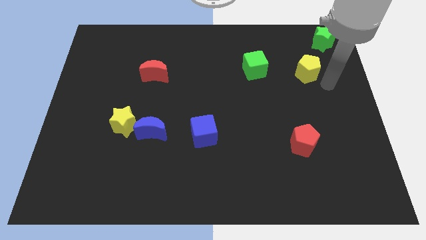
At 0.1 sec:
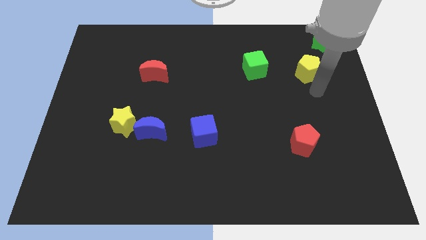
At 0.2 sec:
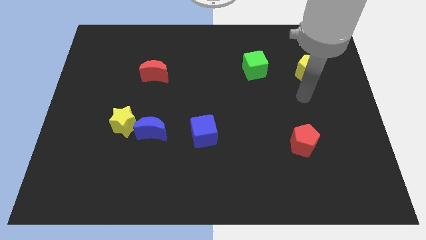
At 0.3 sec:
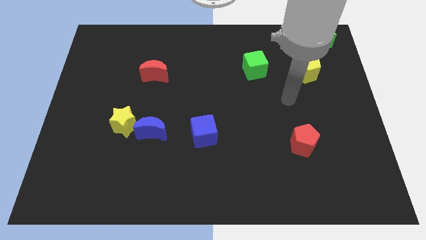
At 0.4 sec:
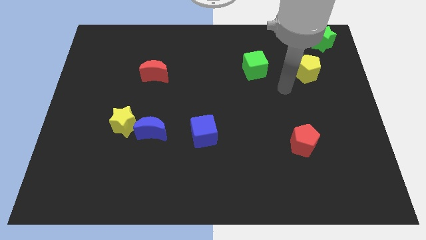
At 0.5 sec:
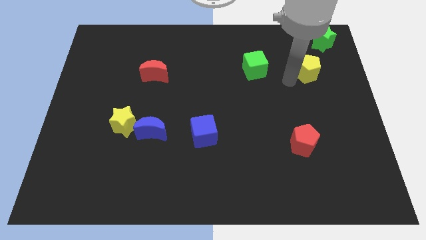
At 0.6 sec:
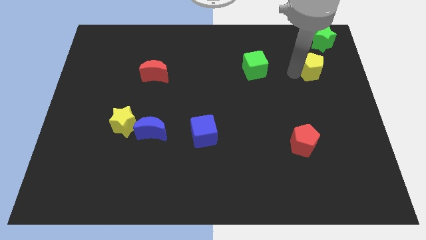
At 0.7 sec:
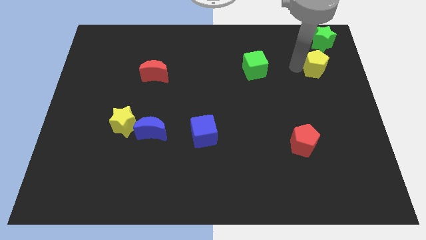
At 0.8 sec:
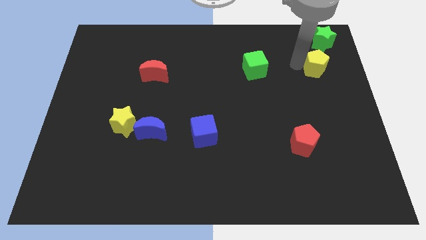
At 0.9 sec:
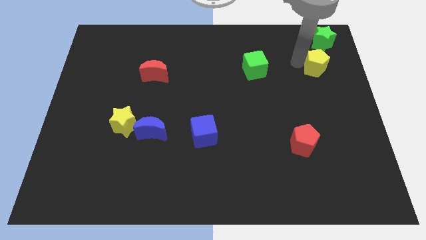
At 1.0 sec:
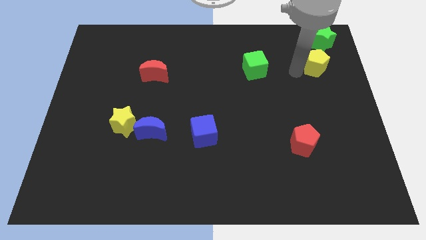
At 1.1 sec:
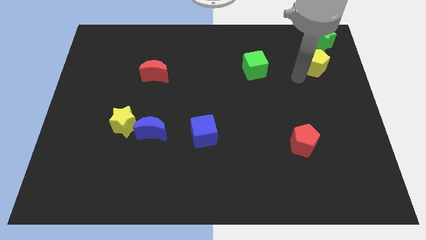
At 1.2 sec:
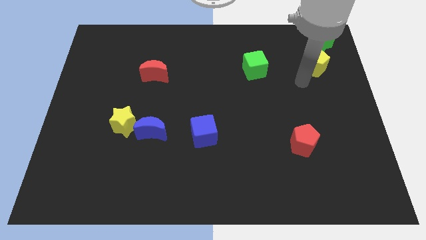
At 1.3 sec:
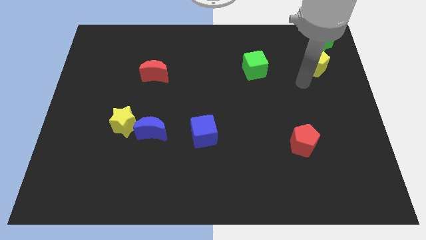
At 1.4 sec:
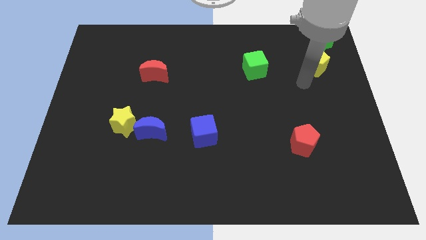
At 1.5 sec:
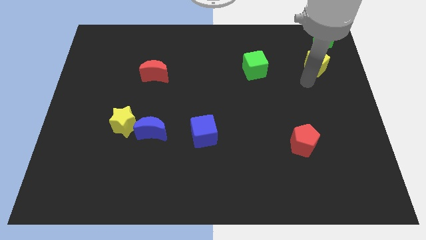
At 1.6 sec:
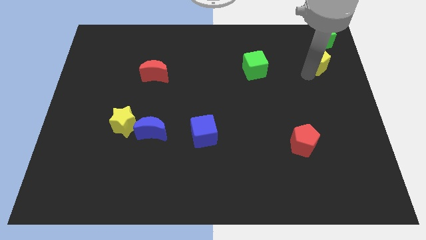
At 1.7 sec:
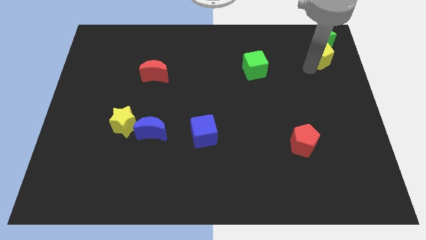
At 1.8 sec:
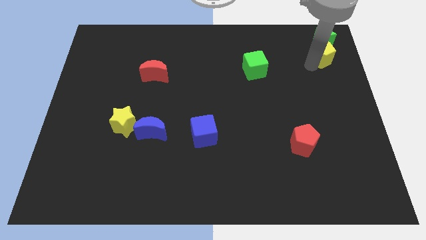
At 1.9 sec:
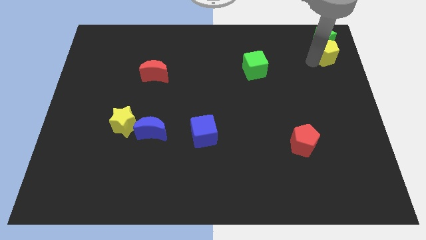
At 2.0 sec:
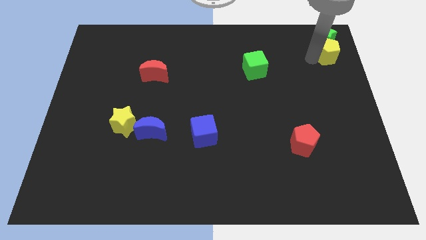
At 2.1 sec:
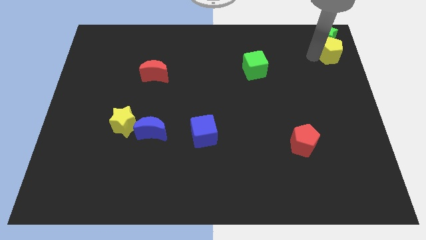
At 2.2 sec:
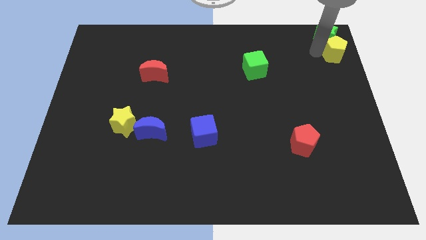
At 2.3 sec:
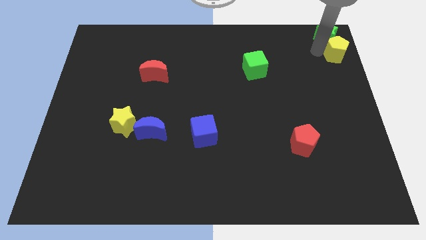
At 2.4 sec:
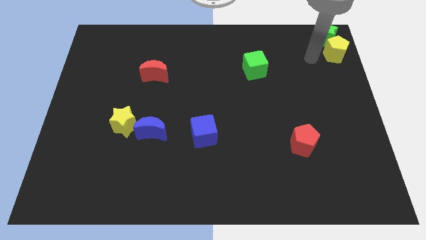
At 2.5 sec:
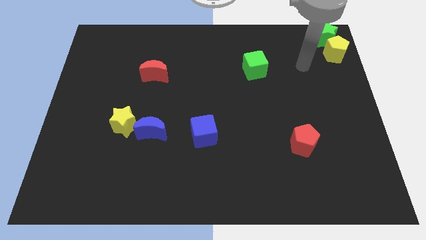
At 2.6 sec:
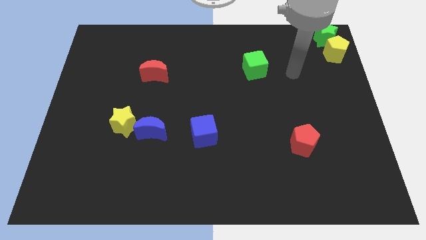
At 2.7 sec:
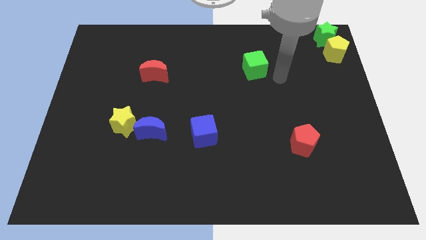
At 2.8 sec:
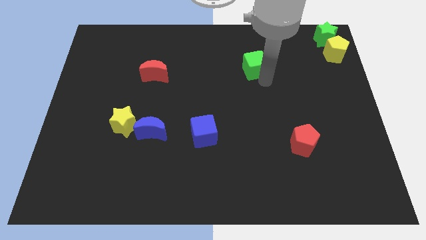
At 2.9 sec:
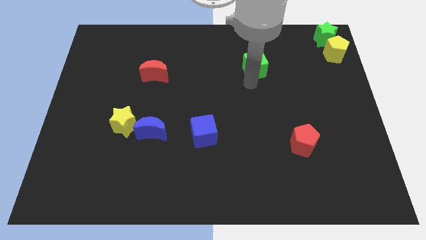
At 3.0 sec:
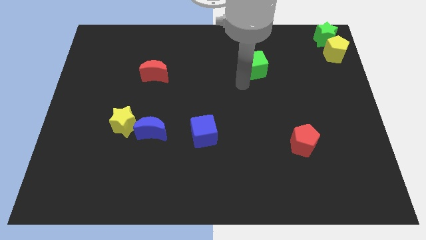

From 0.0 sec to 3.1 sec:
place the yellow pentagon to the bottom of the green star

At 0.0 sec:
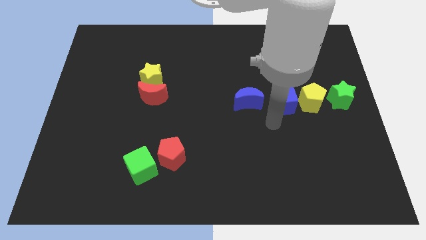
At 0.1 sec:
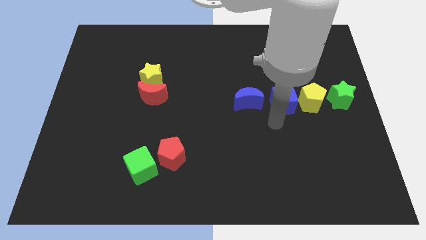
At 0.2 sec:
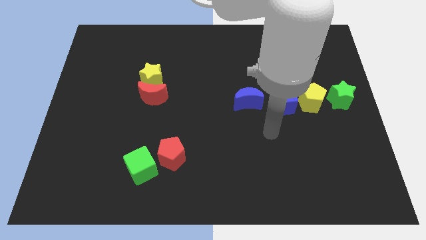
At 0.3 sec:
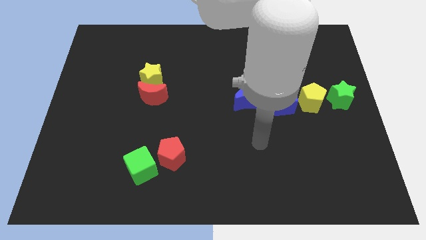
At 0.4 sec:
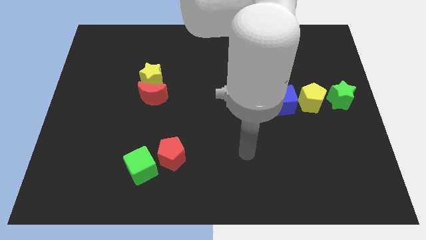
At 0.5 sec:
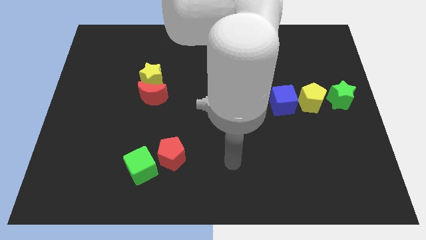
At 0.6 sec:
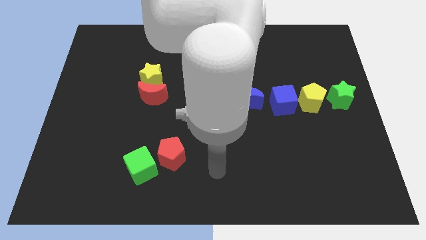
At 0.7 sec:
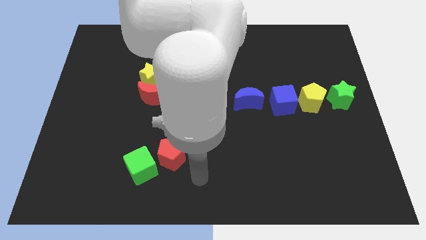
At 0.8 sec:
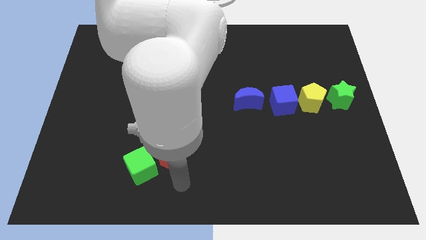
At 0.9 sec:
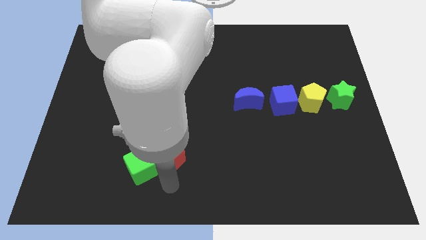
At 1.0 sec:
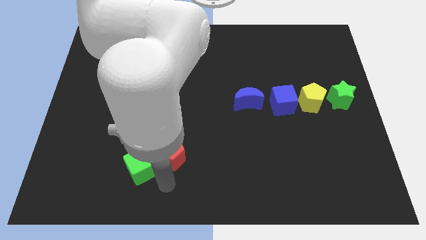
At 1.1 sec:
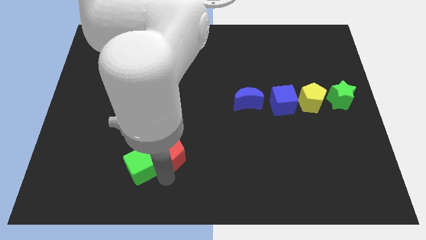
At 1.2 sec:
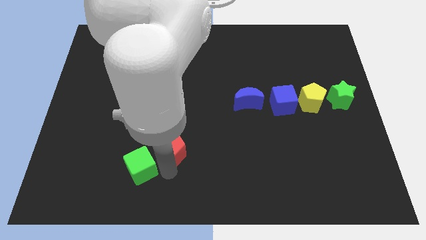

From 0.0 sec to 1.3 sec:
tap the red pentagon

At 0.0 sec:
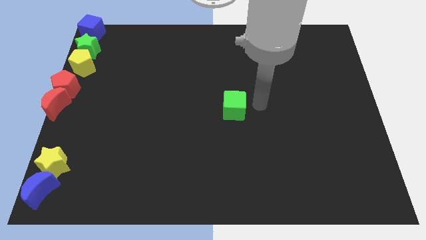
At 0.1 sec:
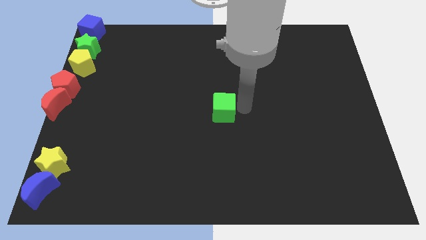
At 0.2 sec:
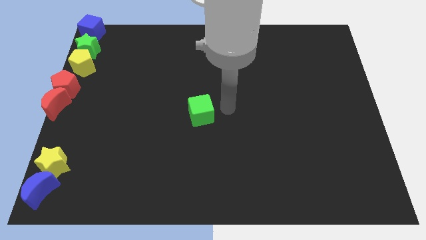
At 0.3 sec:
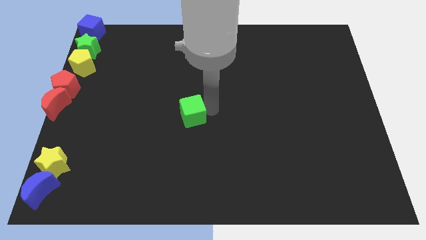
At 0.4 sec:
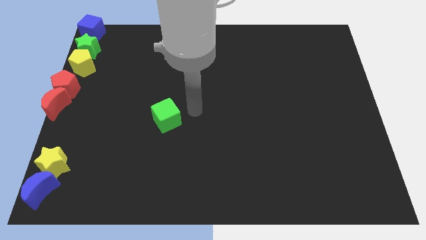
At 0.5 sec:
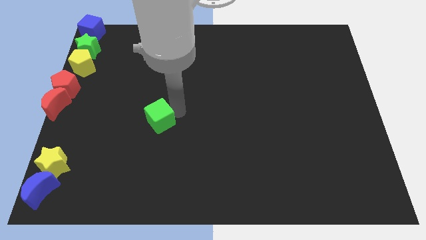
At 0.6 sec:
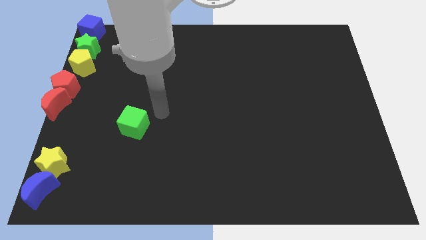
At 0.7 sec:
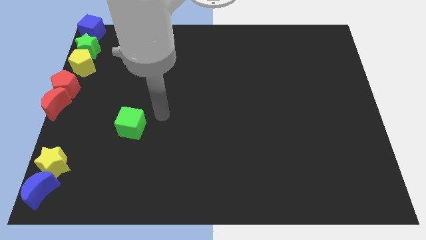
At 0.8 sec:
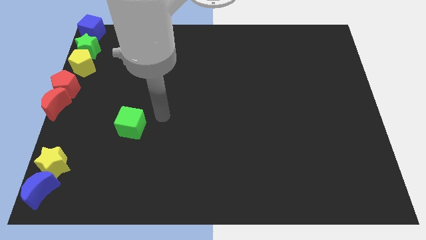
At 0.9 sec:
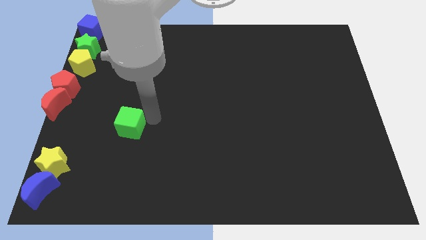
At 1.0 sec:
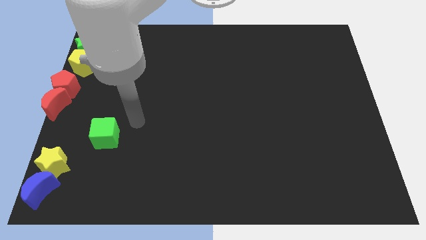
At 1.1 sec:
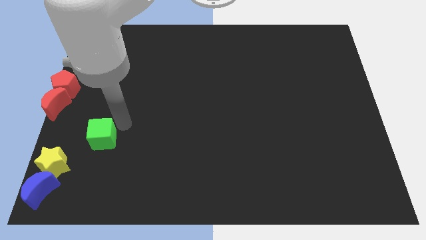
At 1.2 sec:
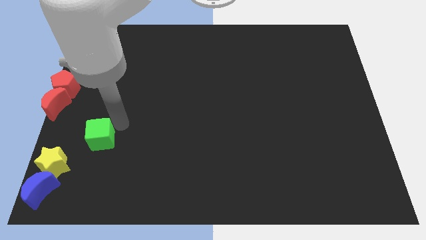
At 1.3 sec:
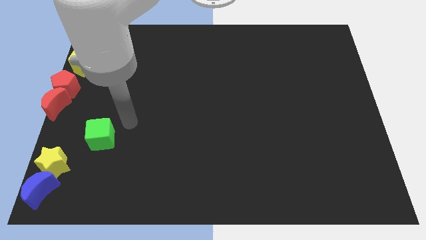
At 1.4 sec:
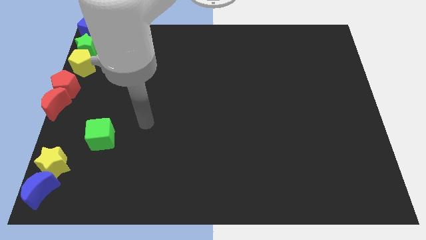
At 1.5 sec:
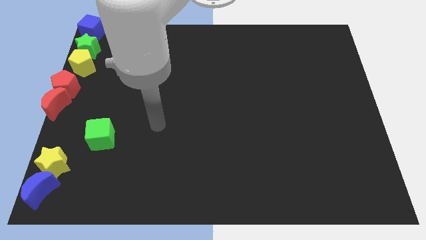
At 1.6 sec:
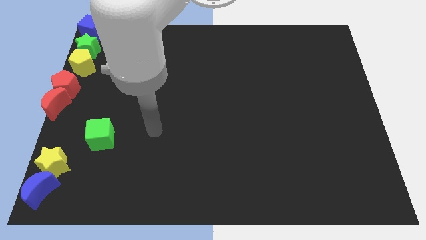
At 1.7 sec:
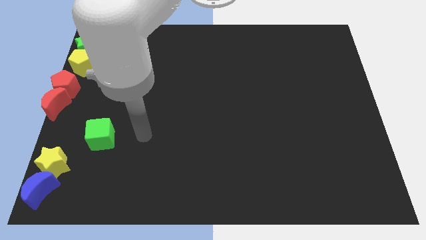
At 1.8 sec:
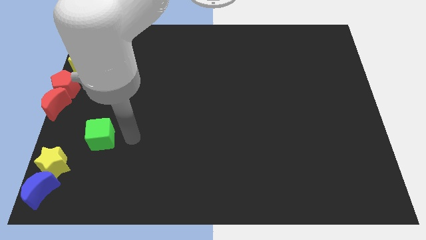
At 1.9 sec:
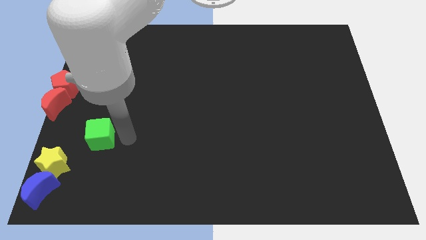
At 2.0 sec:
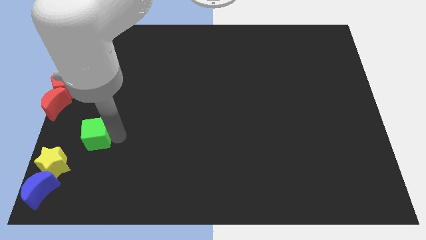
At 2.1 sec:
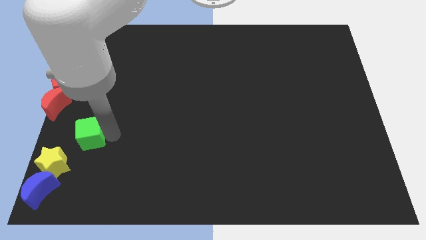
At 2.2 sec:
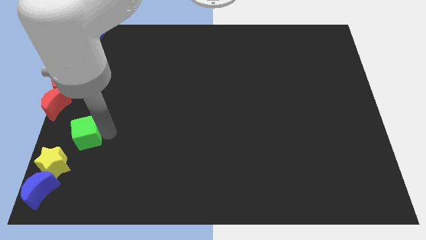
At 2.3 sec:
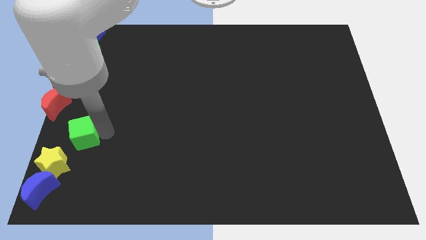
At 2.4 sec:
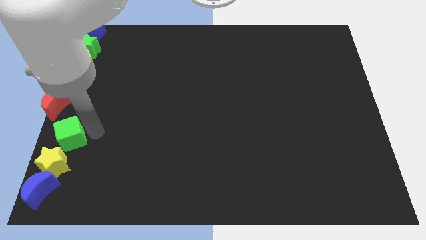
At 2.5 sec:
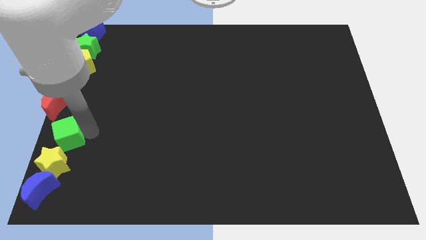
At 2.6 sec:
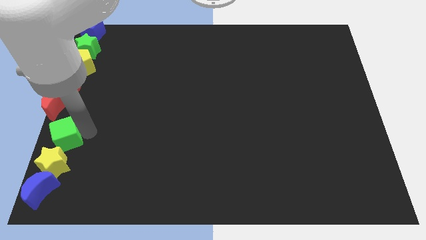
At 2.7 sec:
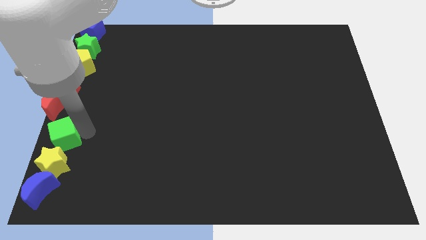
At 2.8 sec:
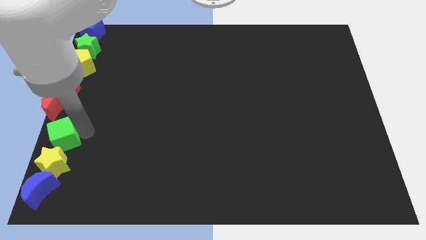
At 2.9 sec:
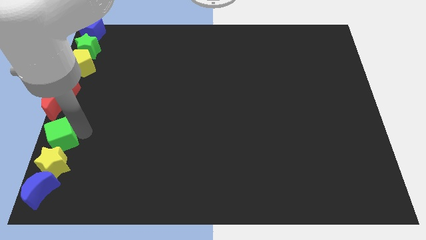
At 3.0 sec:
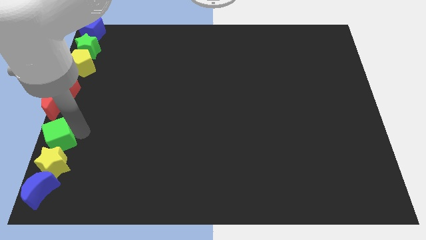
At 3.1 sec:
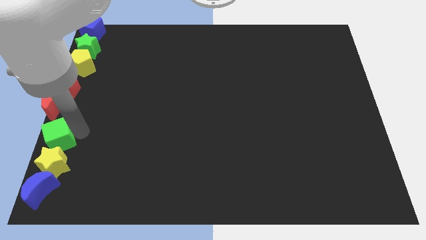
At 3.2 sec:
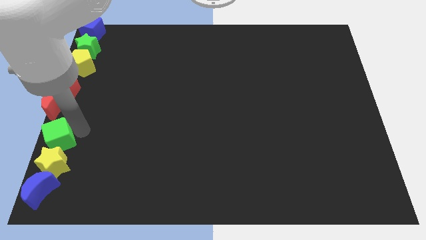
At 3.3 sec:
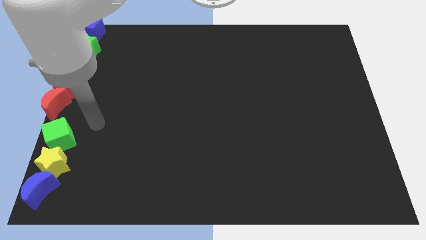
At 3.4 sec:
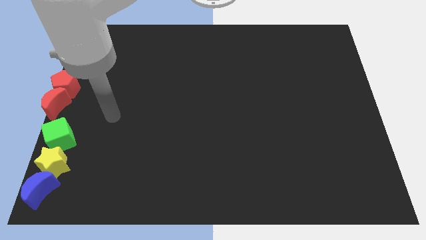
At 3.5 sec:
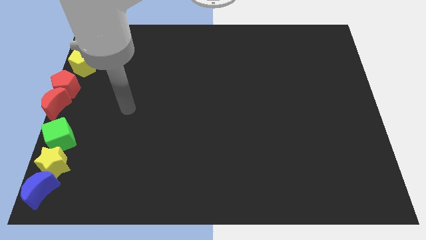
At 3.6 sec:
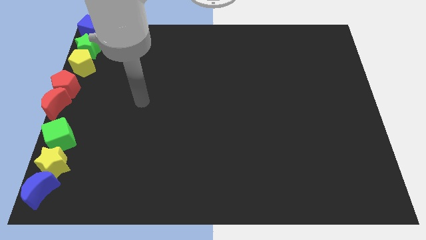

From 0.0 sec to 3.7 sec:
place green cube above the yellow star to form a line blocks

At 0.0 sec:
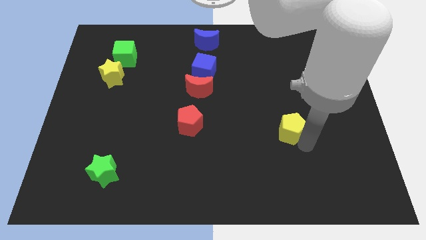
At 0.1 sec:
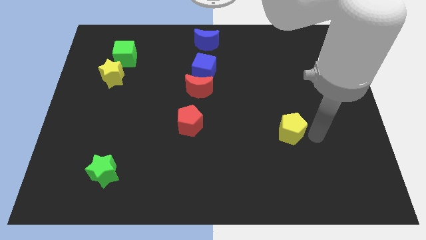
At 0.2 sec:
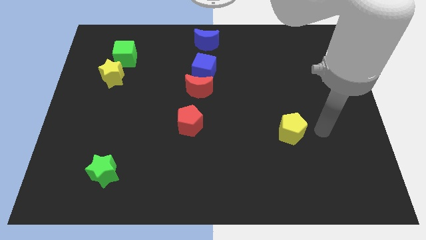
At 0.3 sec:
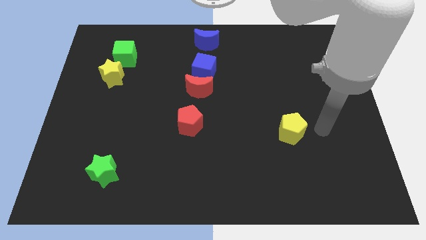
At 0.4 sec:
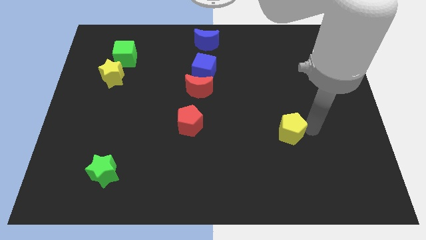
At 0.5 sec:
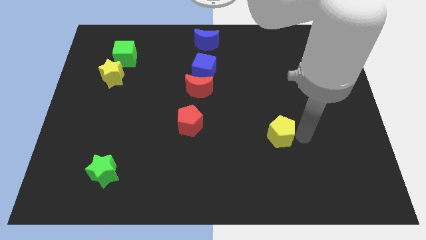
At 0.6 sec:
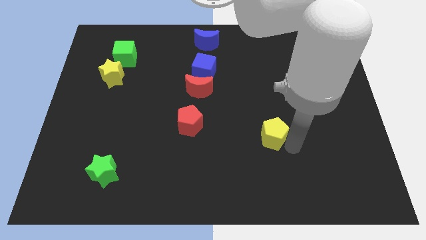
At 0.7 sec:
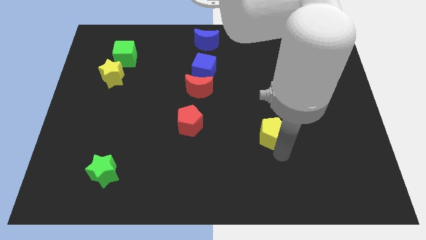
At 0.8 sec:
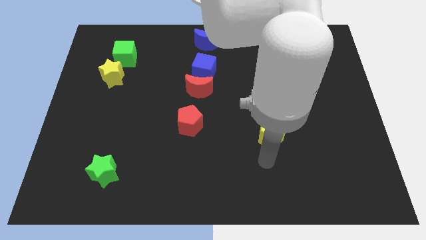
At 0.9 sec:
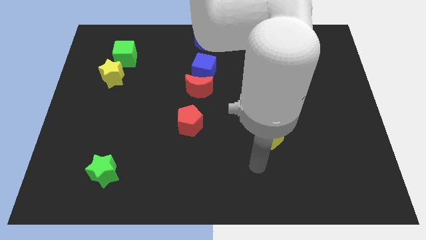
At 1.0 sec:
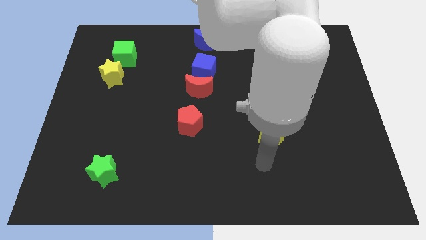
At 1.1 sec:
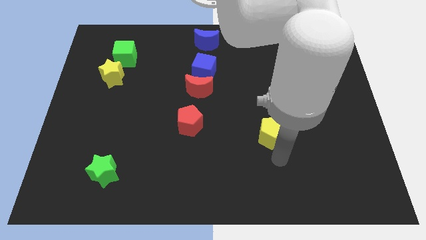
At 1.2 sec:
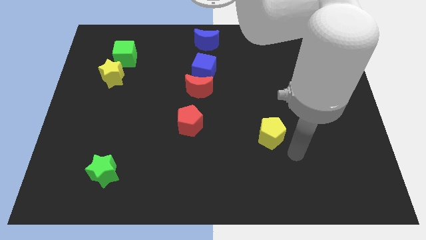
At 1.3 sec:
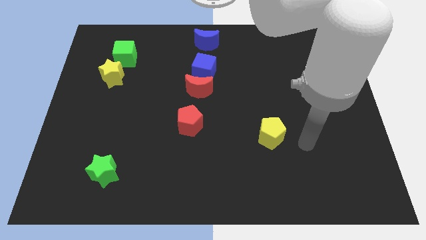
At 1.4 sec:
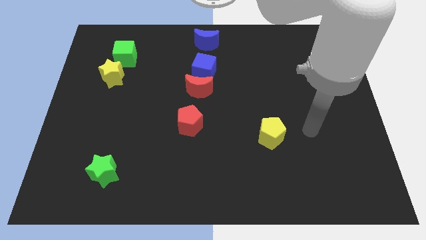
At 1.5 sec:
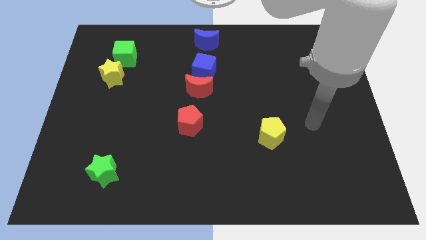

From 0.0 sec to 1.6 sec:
push the yellow pentagon slightly to the left
